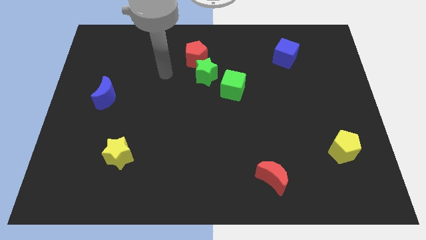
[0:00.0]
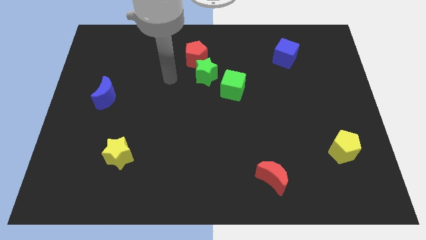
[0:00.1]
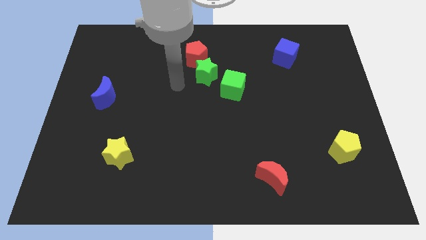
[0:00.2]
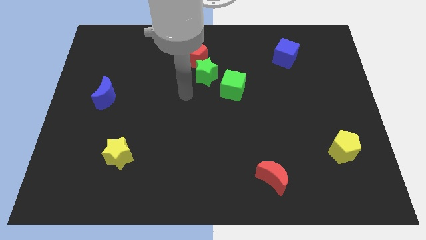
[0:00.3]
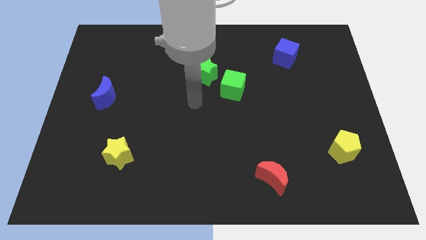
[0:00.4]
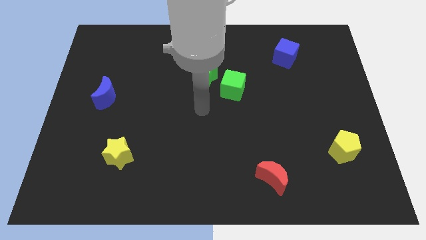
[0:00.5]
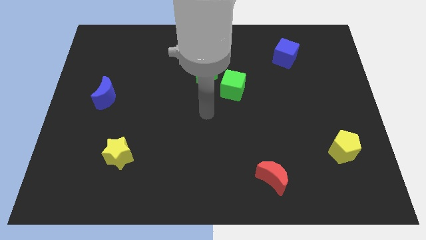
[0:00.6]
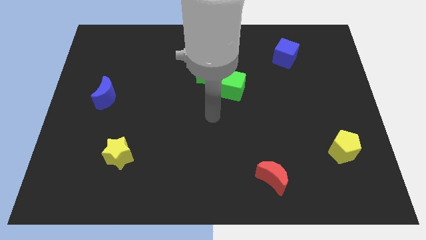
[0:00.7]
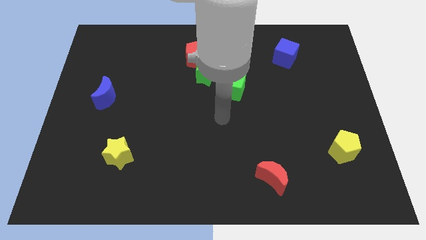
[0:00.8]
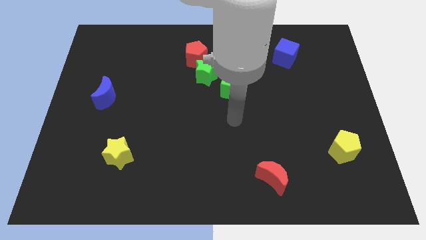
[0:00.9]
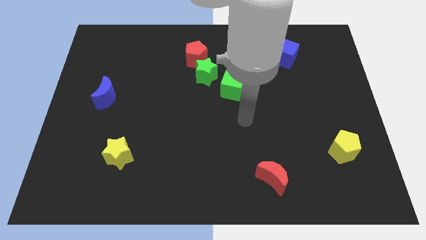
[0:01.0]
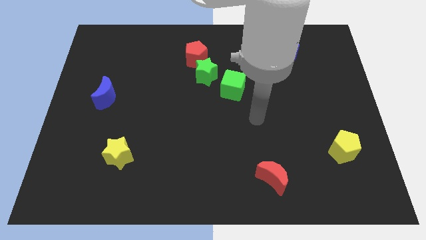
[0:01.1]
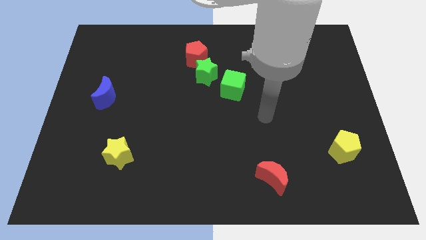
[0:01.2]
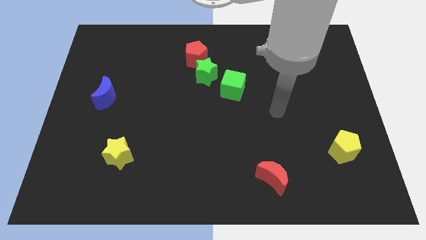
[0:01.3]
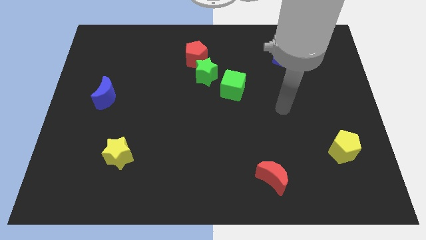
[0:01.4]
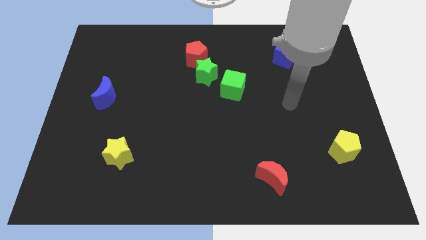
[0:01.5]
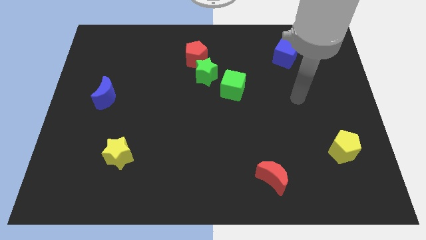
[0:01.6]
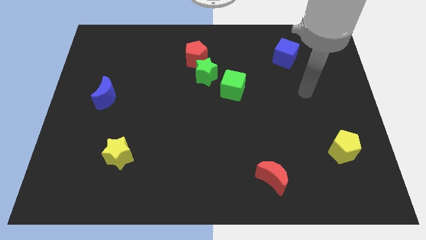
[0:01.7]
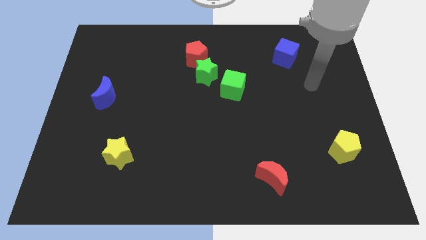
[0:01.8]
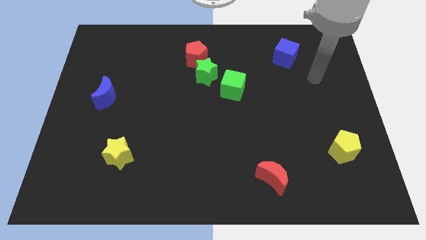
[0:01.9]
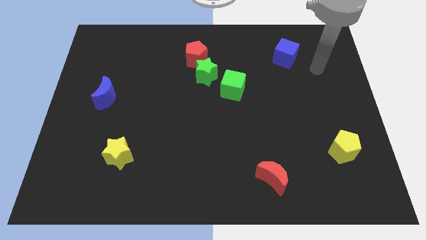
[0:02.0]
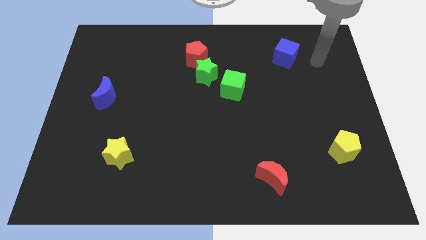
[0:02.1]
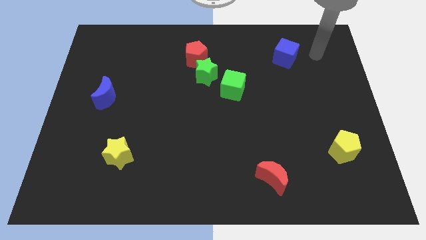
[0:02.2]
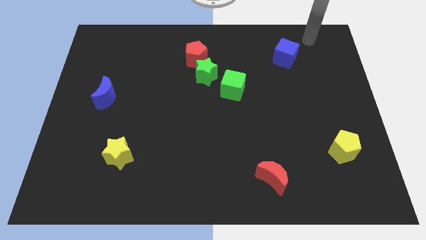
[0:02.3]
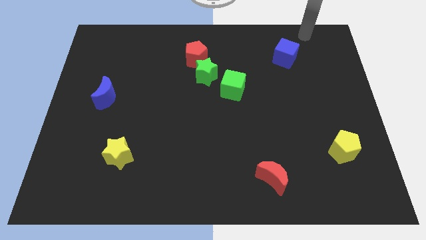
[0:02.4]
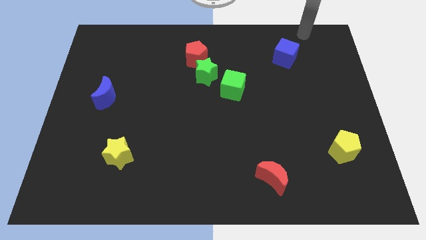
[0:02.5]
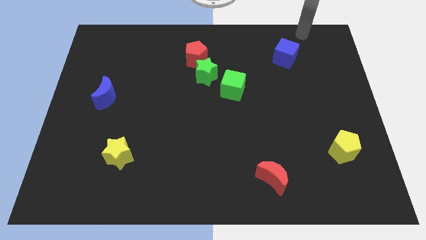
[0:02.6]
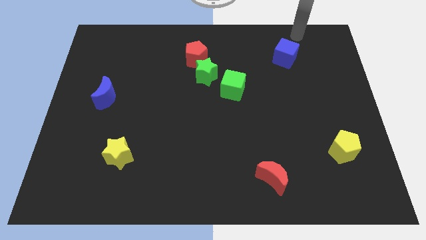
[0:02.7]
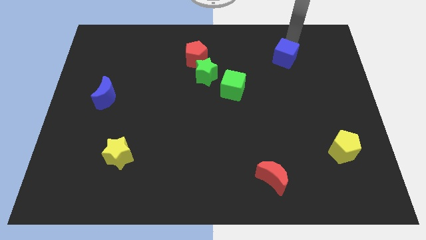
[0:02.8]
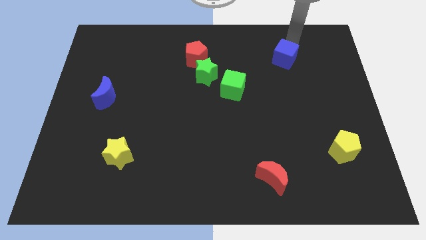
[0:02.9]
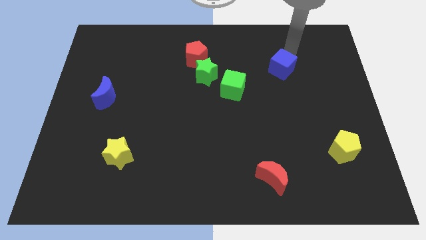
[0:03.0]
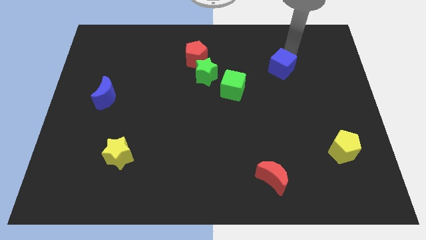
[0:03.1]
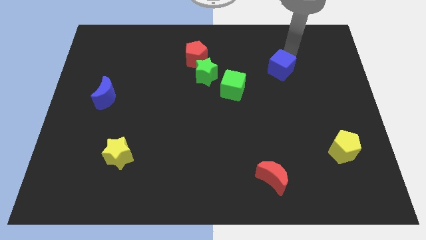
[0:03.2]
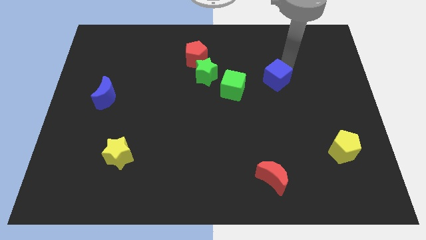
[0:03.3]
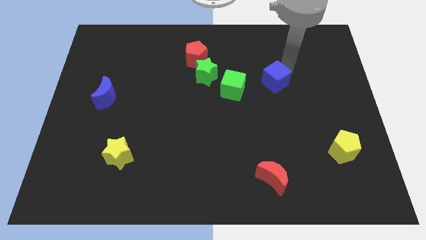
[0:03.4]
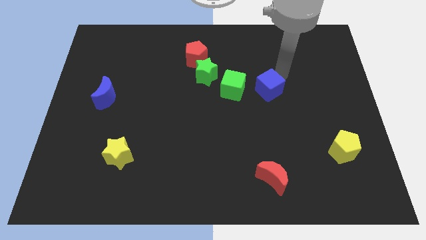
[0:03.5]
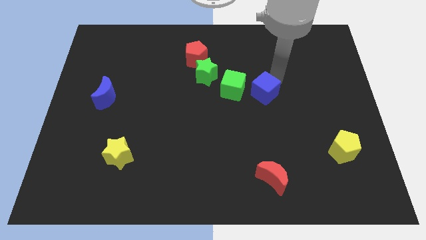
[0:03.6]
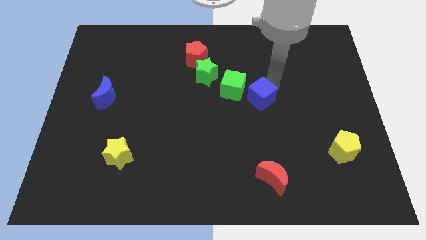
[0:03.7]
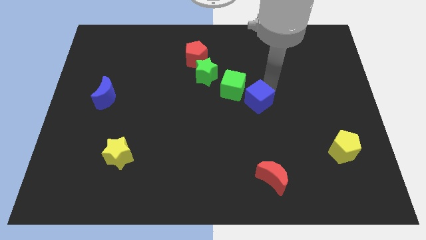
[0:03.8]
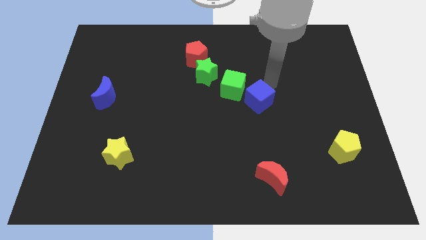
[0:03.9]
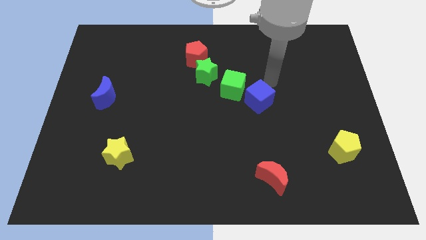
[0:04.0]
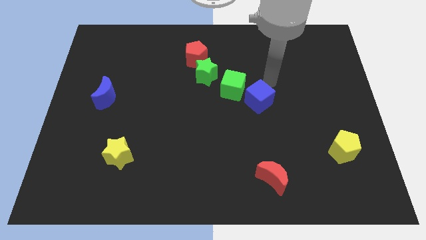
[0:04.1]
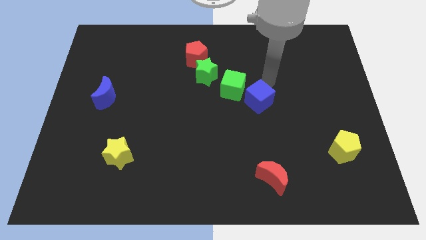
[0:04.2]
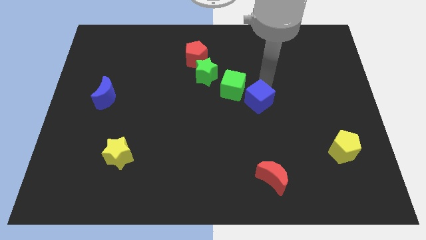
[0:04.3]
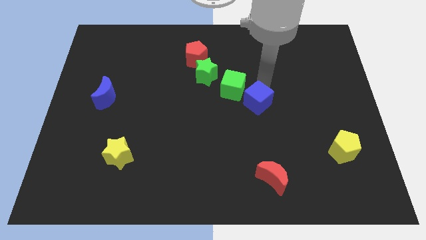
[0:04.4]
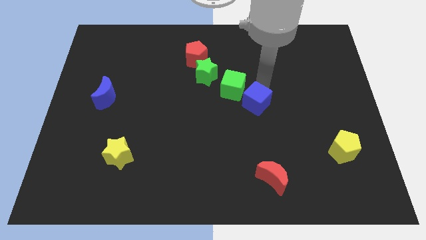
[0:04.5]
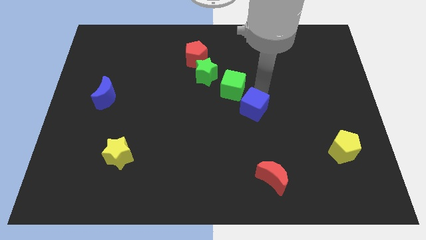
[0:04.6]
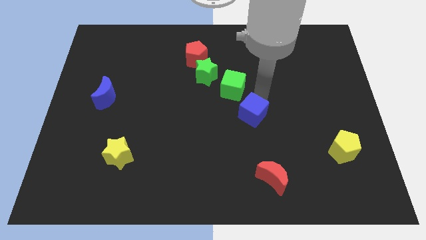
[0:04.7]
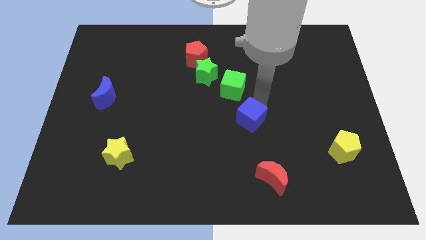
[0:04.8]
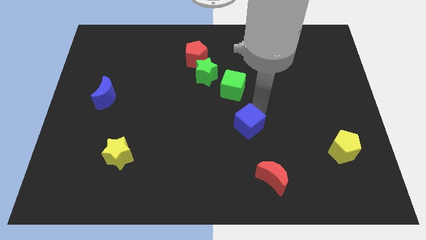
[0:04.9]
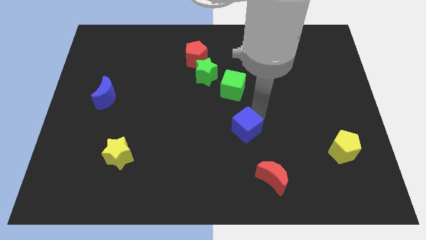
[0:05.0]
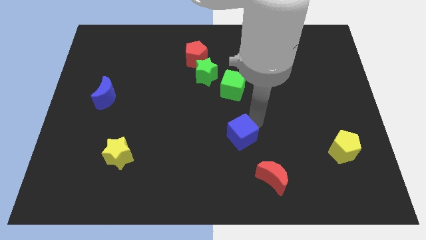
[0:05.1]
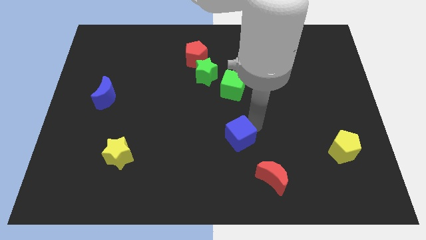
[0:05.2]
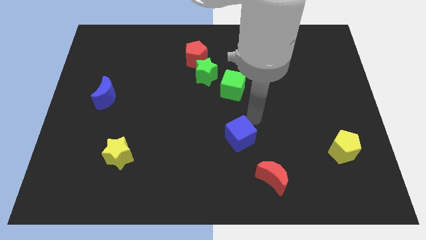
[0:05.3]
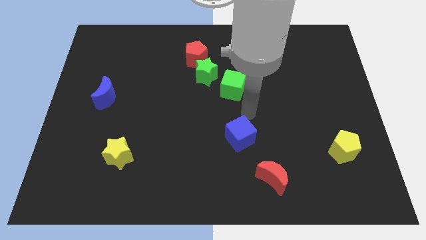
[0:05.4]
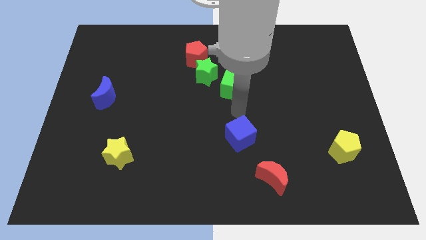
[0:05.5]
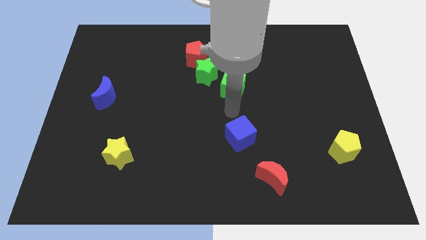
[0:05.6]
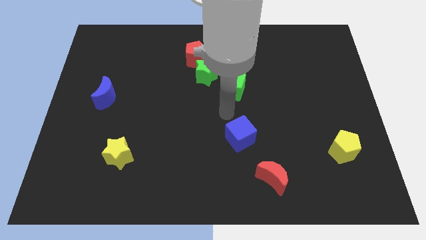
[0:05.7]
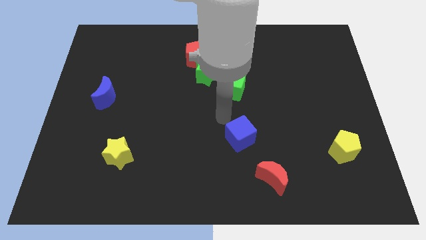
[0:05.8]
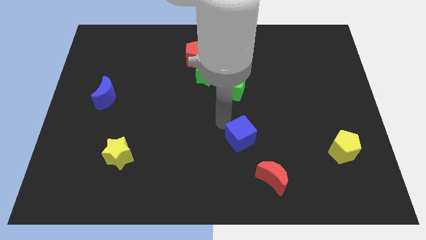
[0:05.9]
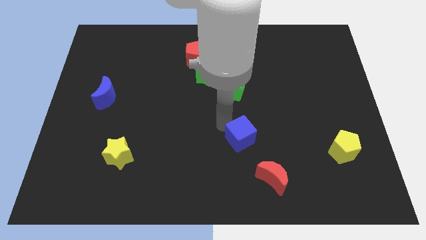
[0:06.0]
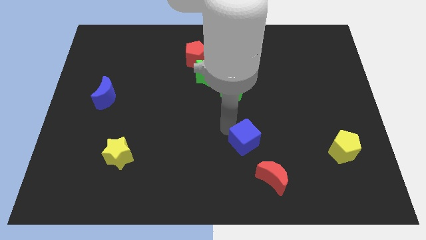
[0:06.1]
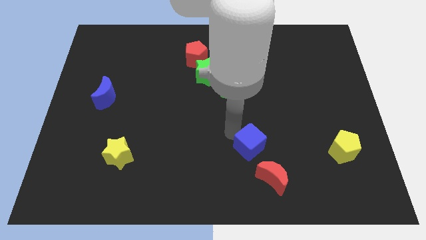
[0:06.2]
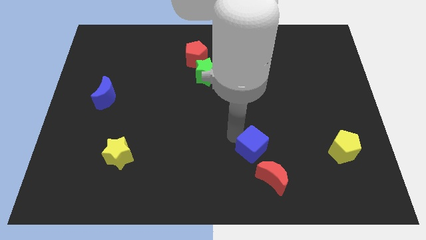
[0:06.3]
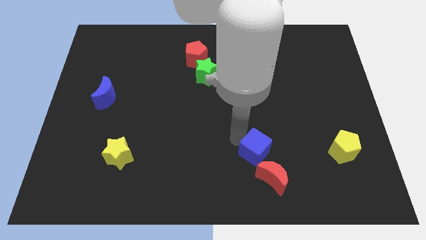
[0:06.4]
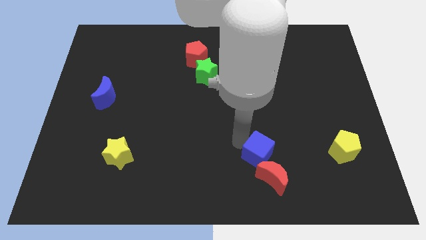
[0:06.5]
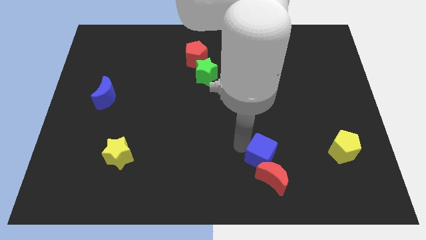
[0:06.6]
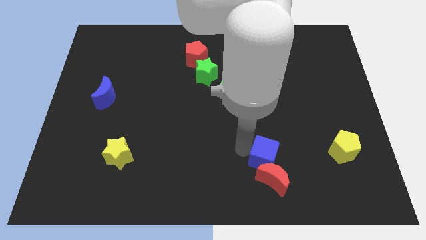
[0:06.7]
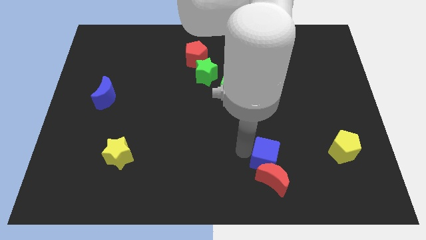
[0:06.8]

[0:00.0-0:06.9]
move the blue cube close to the red moon

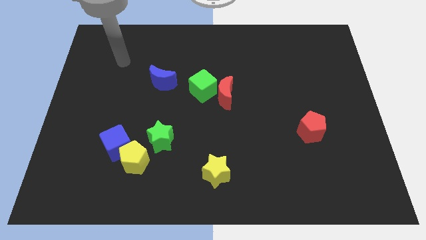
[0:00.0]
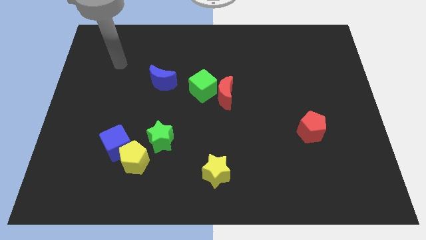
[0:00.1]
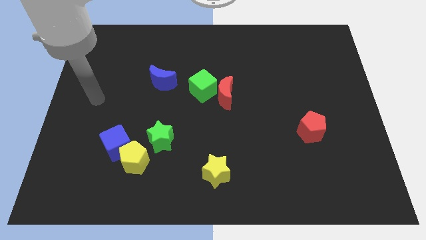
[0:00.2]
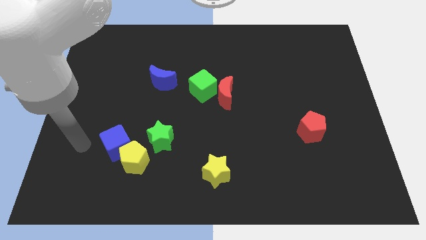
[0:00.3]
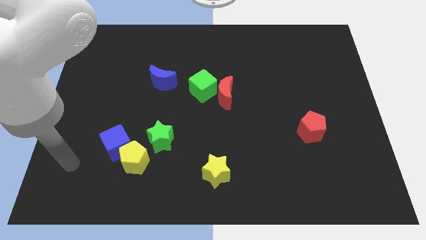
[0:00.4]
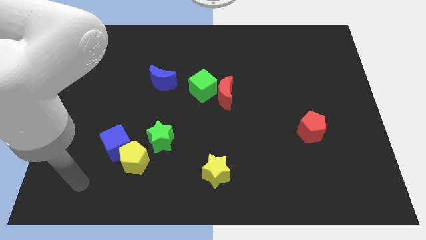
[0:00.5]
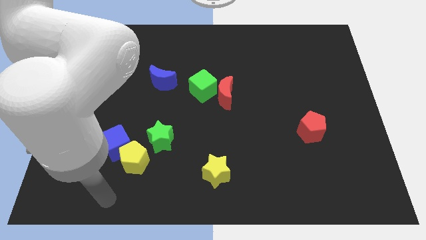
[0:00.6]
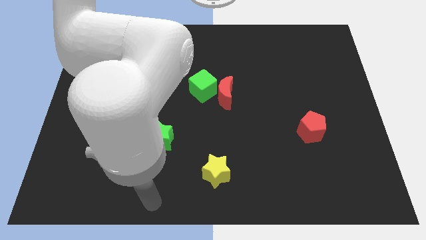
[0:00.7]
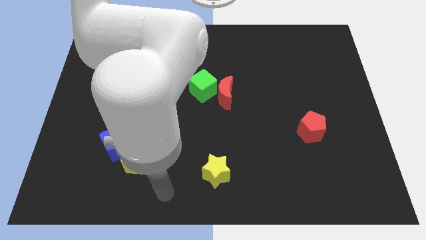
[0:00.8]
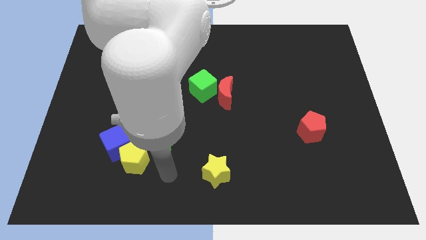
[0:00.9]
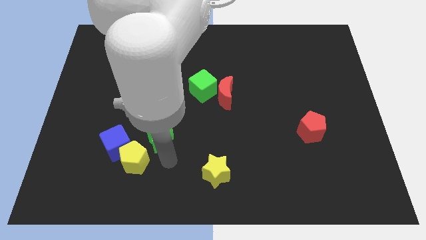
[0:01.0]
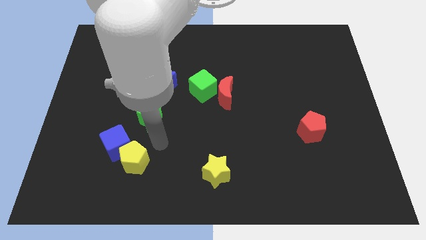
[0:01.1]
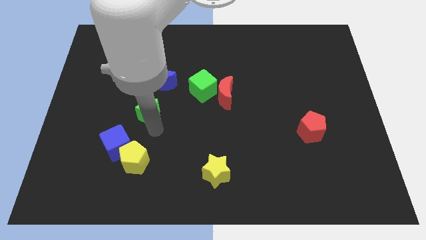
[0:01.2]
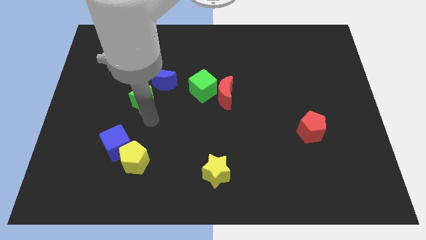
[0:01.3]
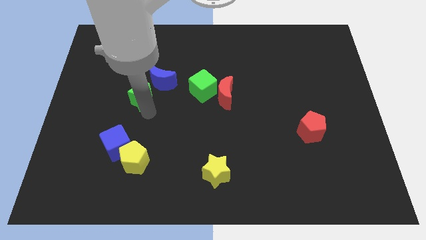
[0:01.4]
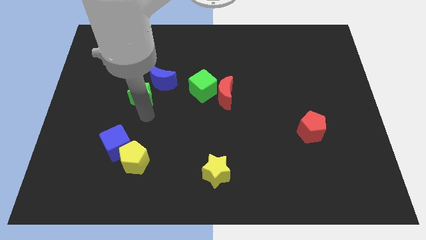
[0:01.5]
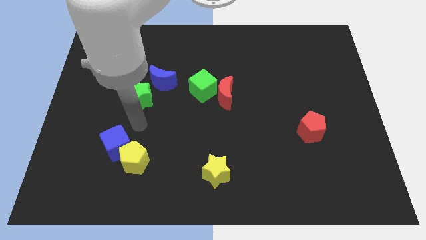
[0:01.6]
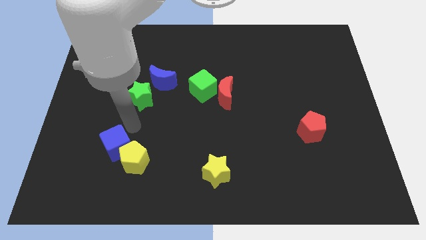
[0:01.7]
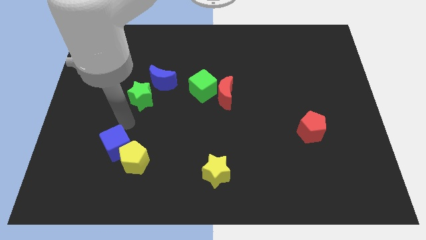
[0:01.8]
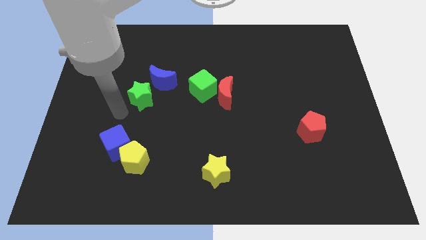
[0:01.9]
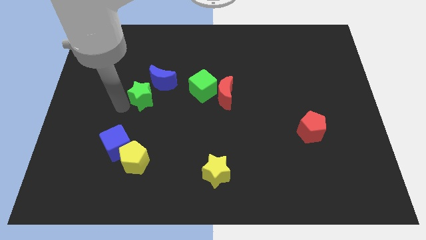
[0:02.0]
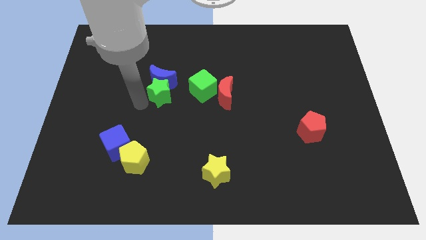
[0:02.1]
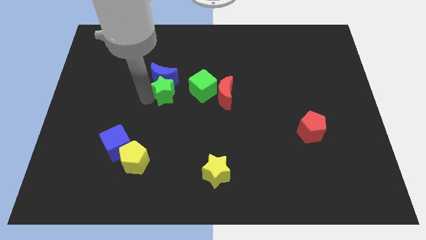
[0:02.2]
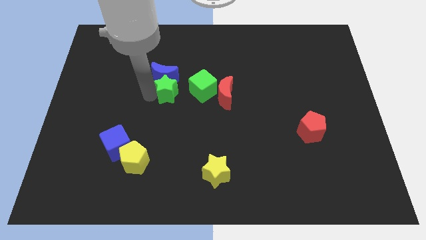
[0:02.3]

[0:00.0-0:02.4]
put the green star to the blue moon
